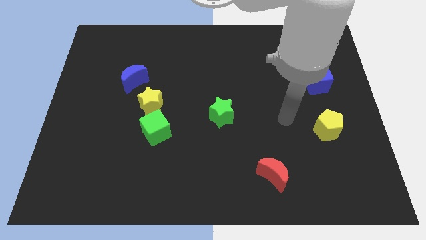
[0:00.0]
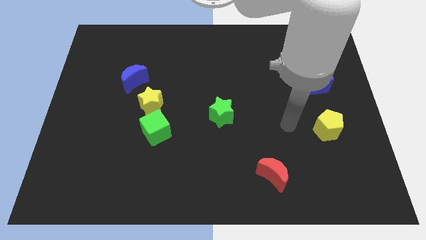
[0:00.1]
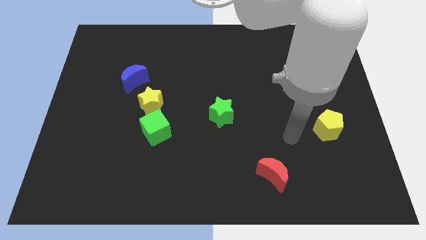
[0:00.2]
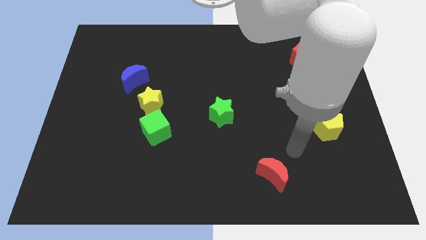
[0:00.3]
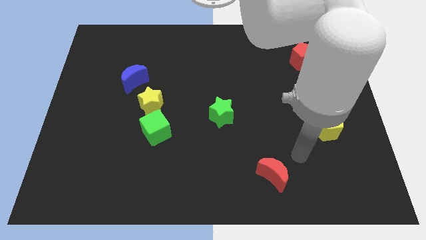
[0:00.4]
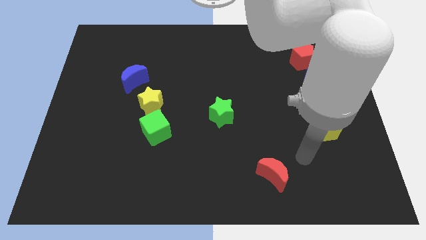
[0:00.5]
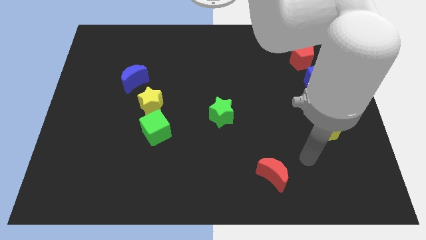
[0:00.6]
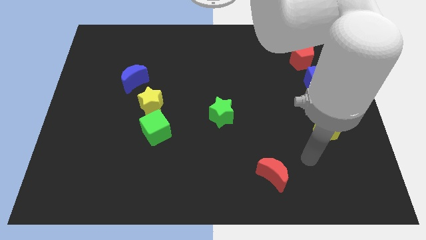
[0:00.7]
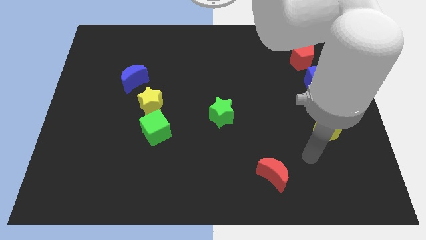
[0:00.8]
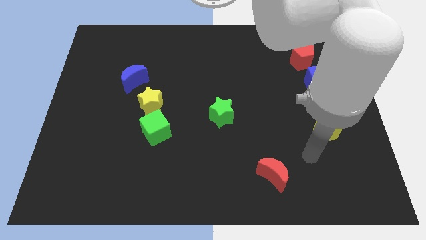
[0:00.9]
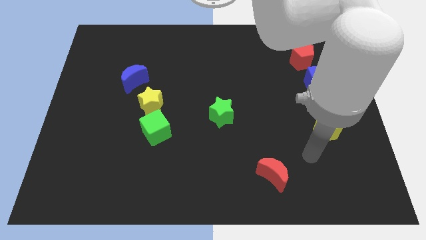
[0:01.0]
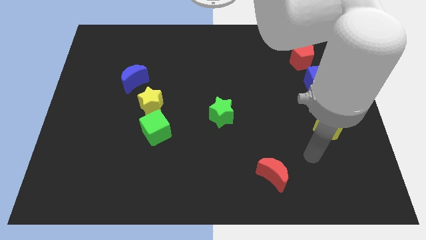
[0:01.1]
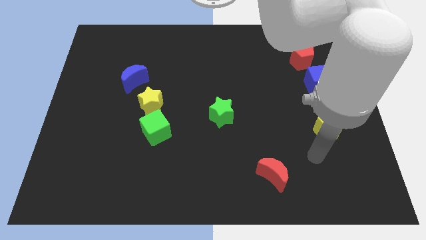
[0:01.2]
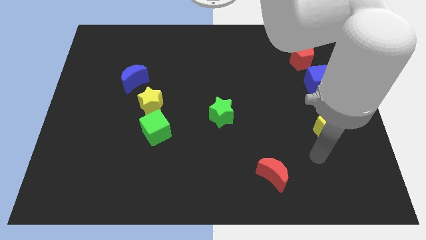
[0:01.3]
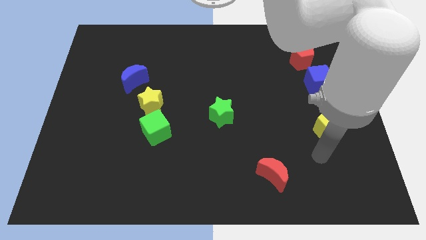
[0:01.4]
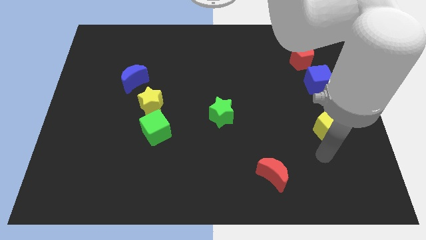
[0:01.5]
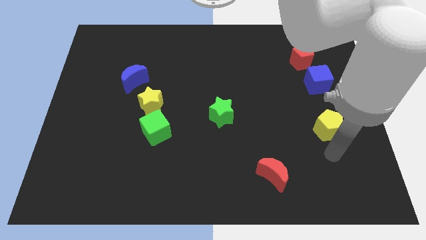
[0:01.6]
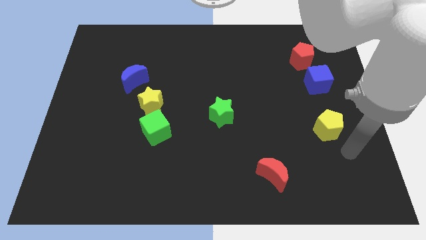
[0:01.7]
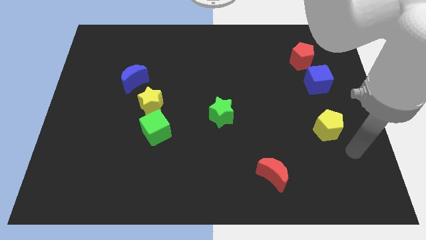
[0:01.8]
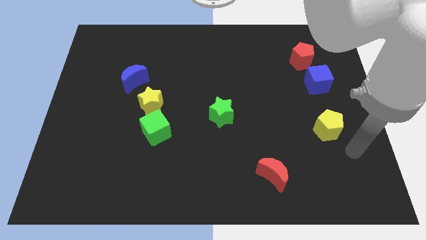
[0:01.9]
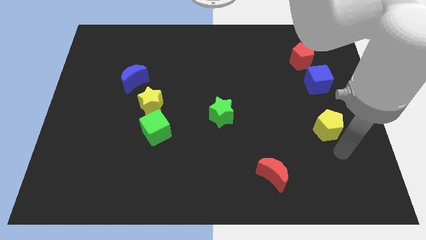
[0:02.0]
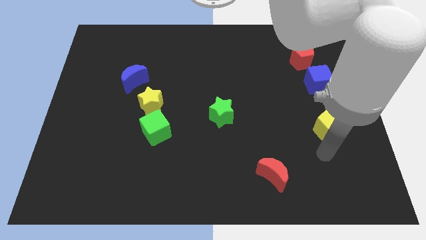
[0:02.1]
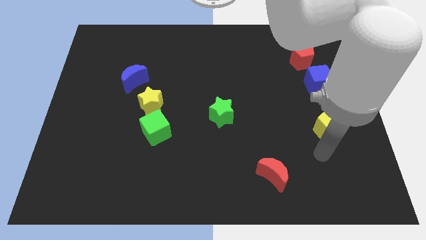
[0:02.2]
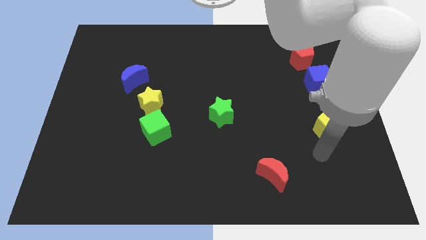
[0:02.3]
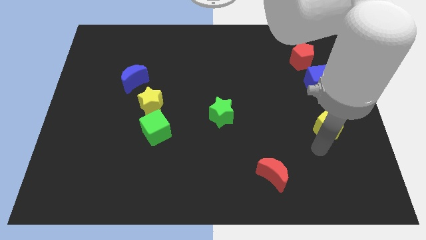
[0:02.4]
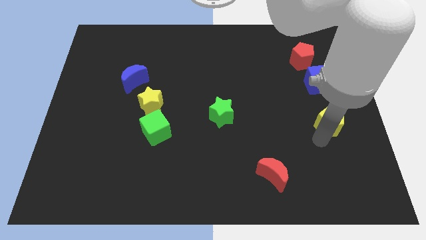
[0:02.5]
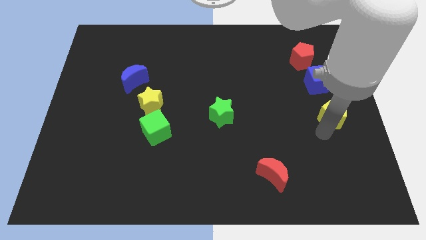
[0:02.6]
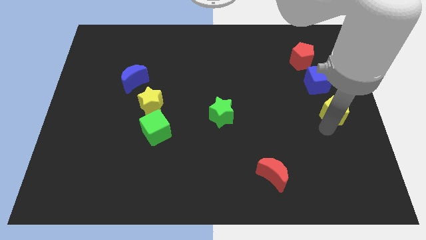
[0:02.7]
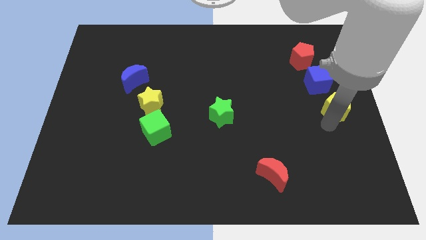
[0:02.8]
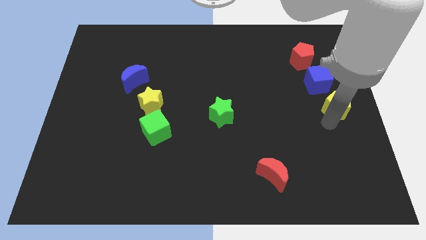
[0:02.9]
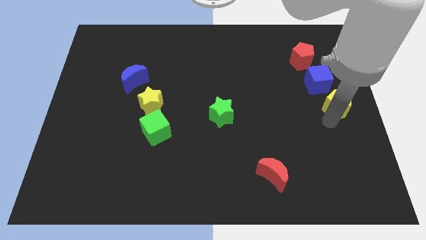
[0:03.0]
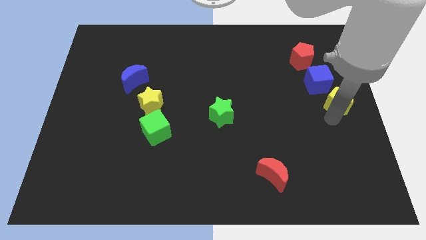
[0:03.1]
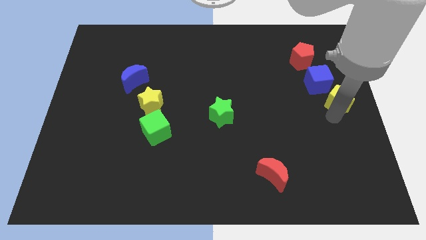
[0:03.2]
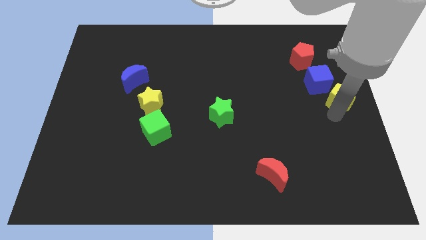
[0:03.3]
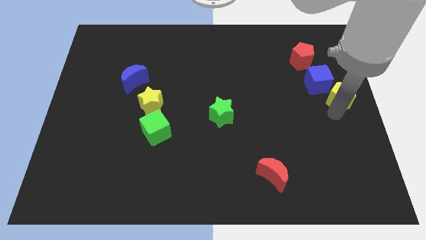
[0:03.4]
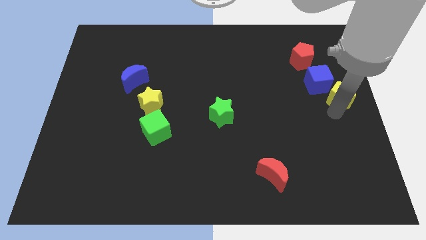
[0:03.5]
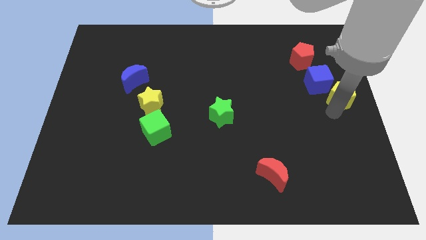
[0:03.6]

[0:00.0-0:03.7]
push the yellow pentagon slightly to the right side of the blue cube

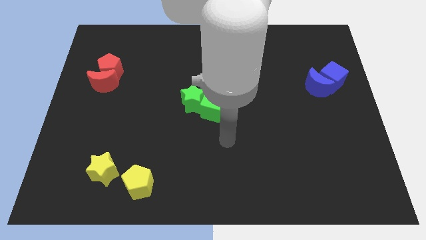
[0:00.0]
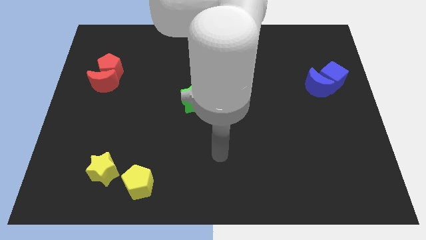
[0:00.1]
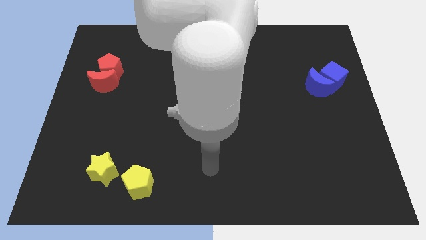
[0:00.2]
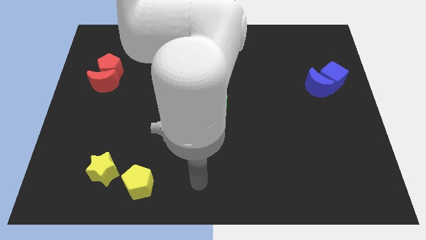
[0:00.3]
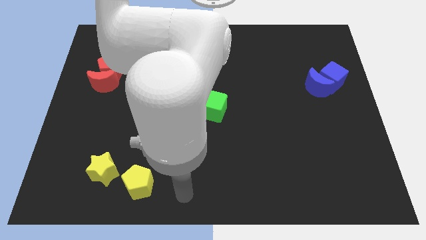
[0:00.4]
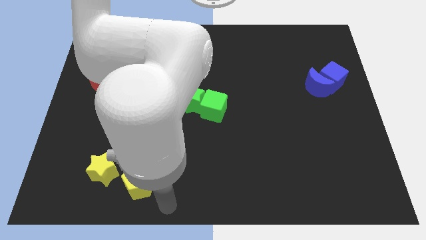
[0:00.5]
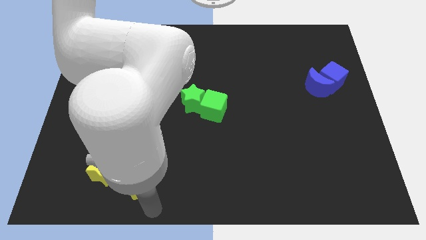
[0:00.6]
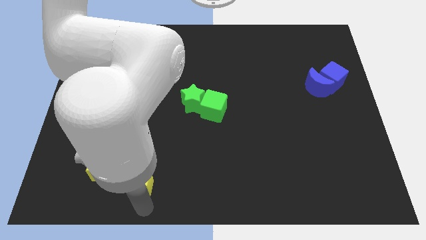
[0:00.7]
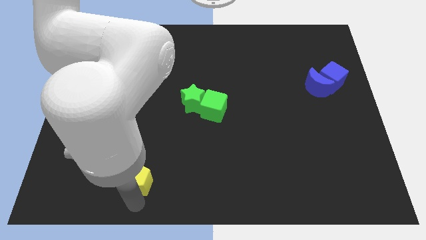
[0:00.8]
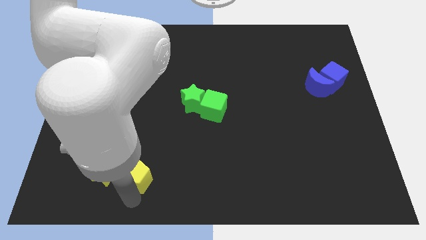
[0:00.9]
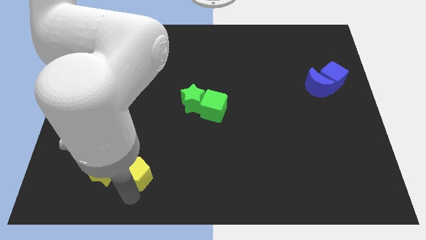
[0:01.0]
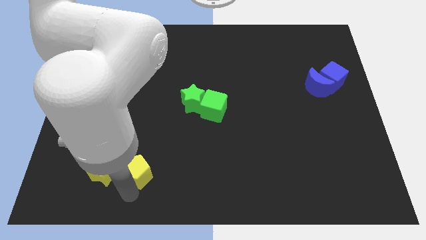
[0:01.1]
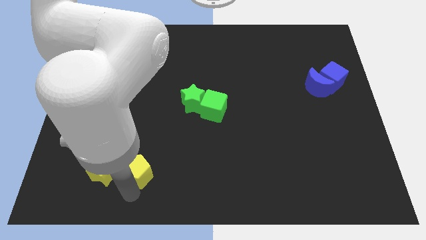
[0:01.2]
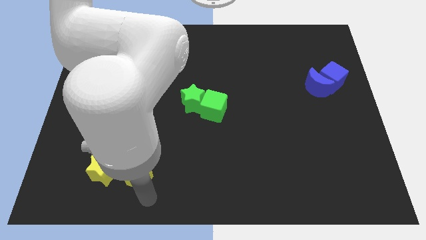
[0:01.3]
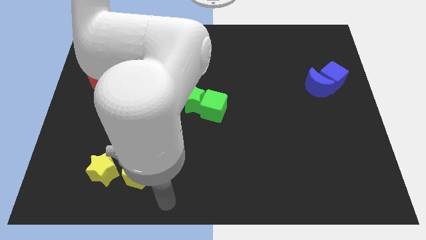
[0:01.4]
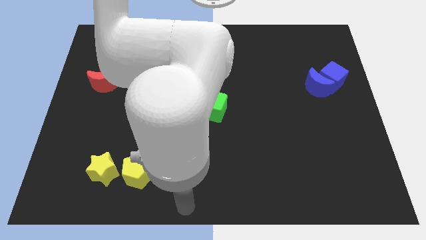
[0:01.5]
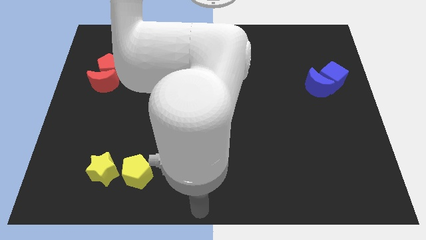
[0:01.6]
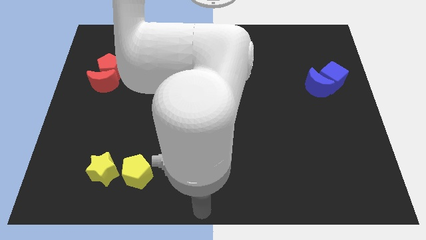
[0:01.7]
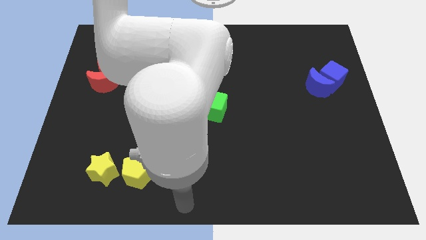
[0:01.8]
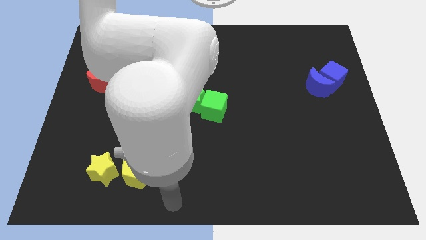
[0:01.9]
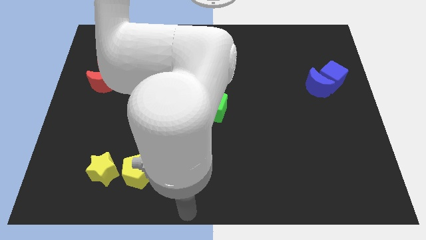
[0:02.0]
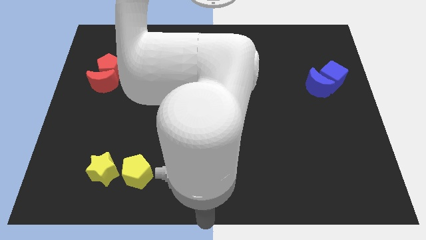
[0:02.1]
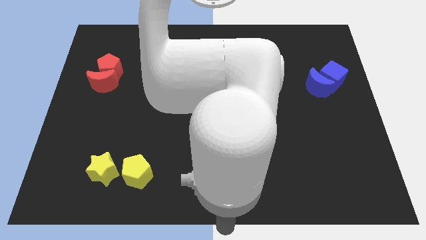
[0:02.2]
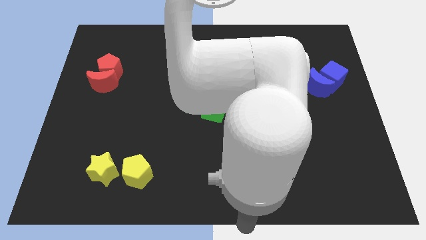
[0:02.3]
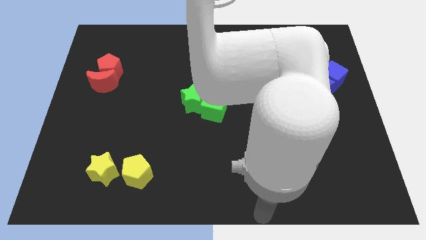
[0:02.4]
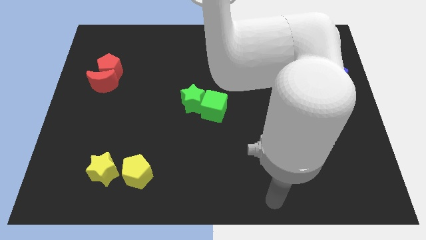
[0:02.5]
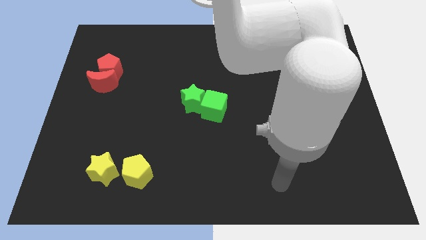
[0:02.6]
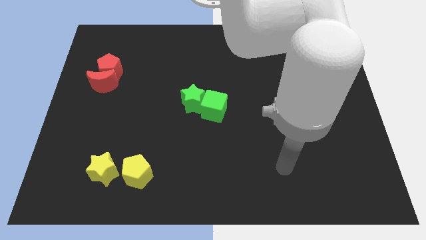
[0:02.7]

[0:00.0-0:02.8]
slightly move the yellow pentagon to the right of the yellow star

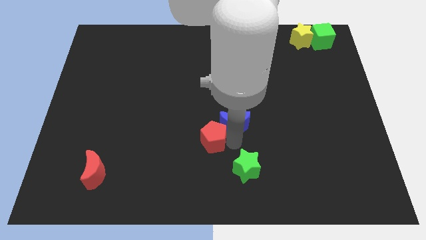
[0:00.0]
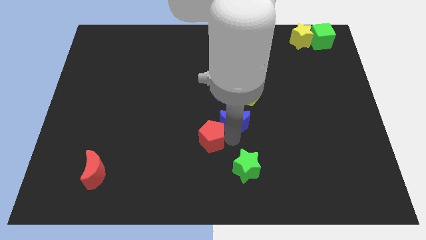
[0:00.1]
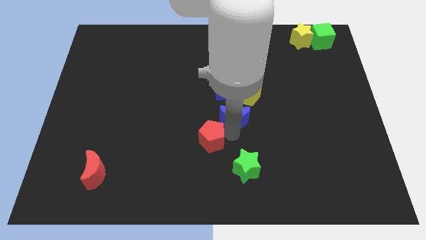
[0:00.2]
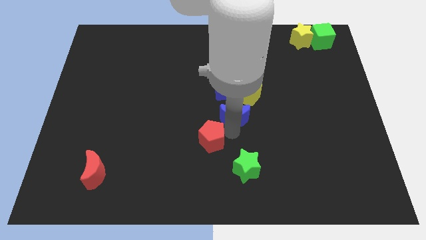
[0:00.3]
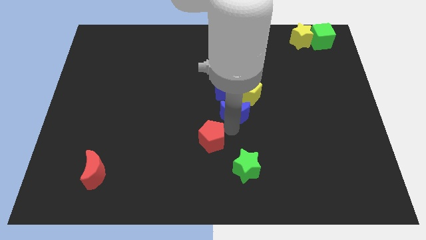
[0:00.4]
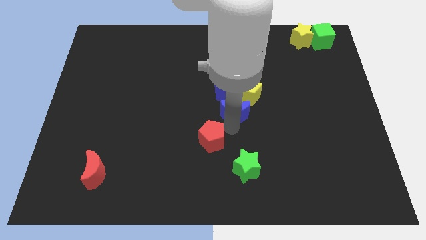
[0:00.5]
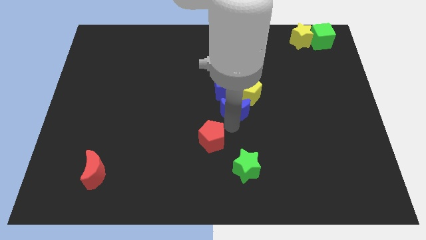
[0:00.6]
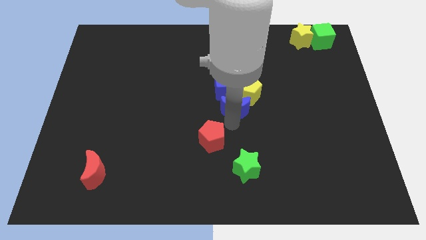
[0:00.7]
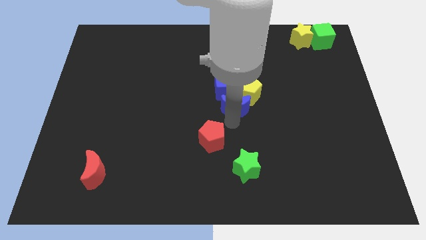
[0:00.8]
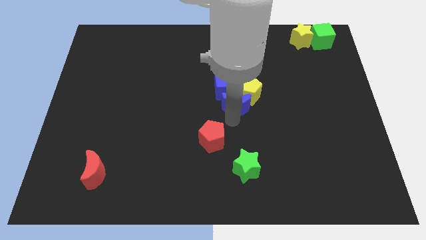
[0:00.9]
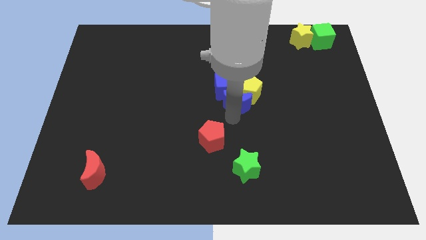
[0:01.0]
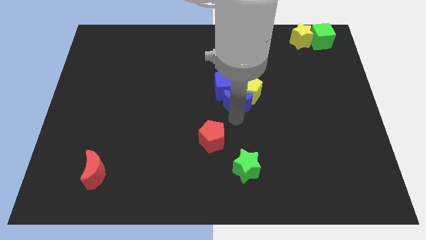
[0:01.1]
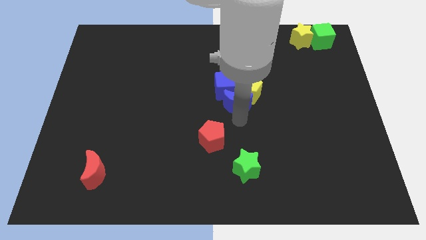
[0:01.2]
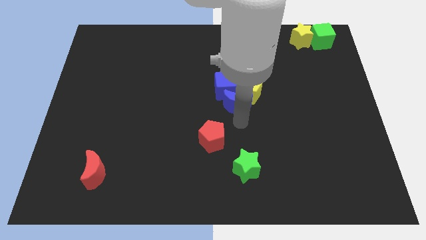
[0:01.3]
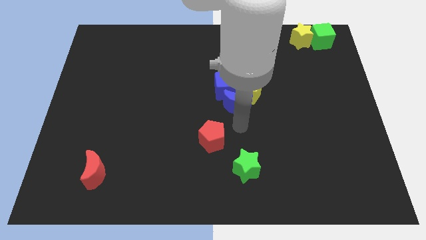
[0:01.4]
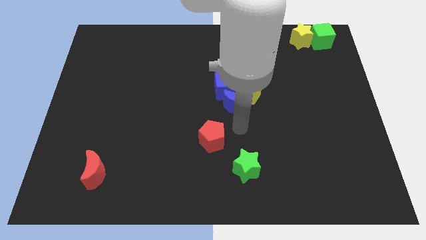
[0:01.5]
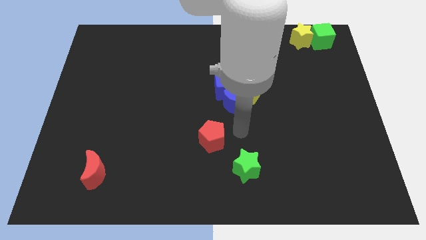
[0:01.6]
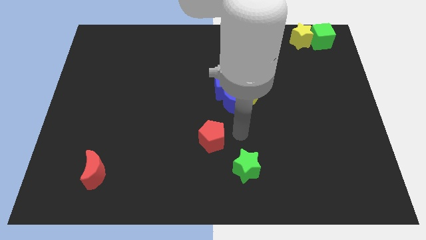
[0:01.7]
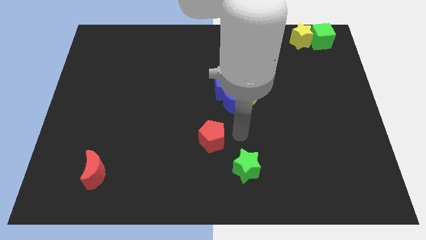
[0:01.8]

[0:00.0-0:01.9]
add the blue moon to the blue cube and yellow pentagon

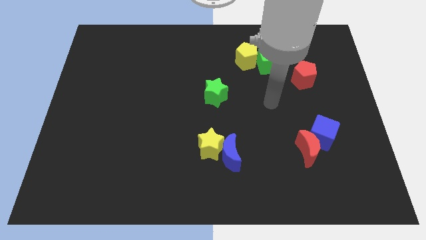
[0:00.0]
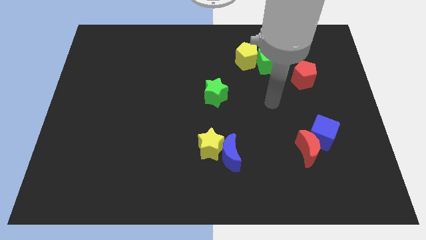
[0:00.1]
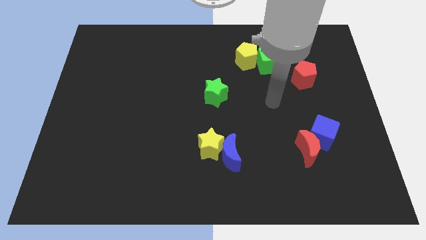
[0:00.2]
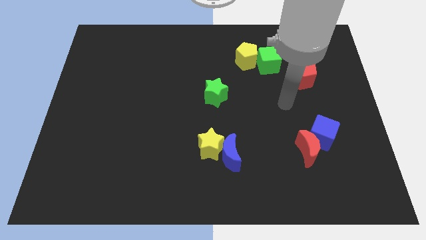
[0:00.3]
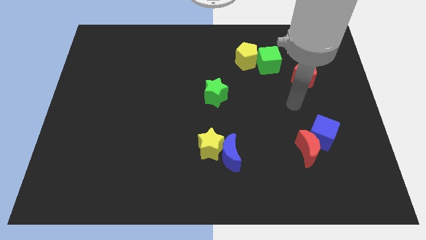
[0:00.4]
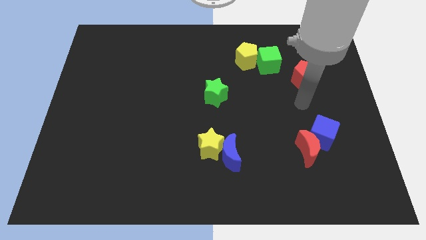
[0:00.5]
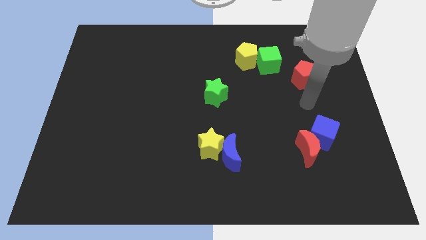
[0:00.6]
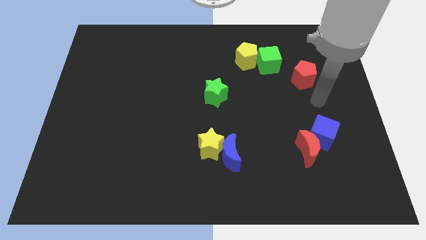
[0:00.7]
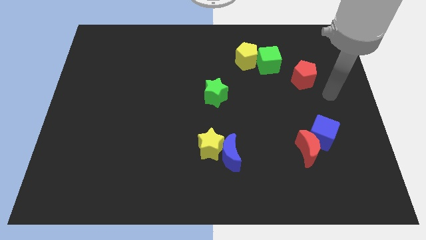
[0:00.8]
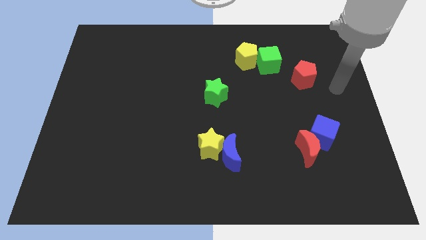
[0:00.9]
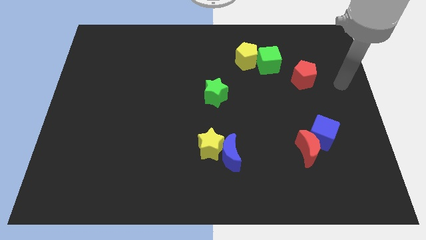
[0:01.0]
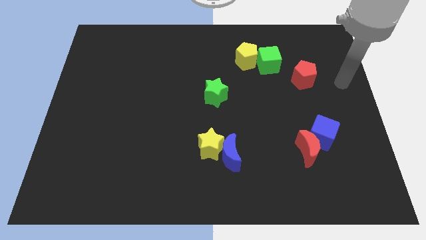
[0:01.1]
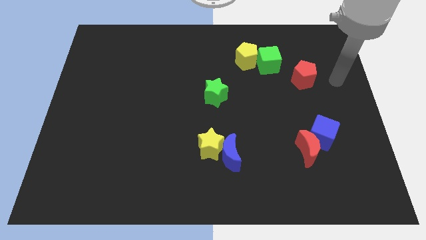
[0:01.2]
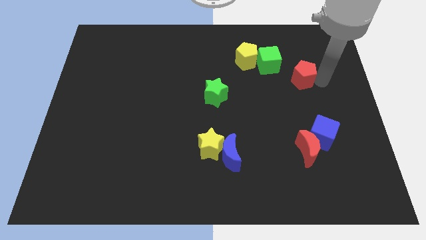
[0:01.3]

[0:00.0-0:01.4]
move your arm to the right side of the red pentagon
